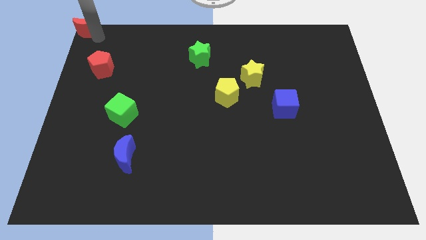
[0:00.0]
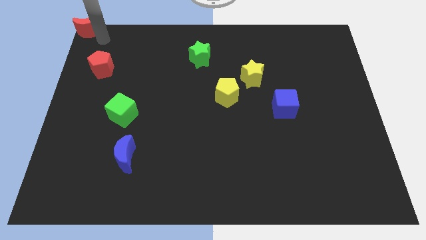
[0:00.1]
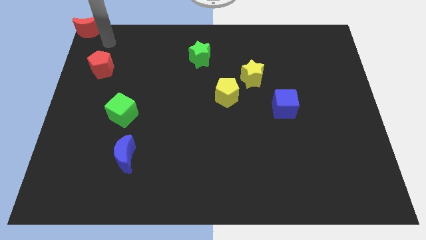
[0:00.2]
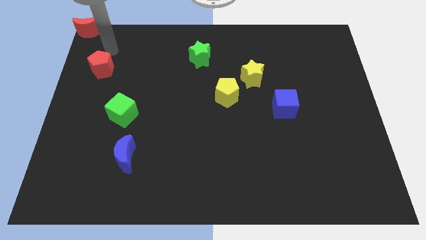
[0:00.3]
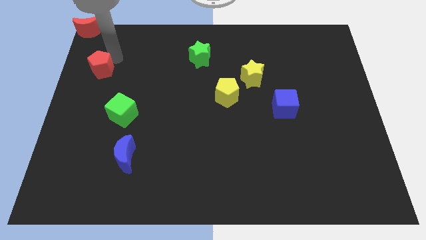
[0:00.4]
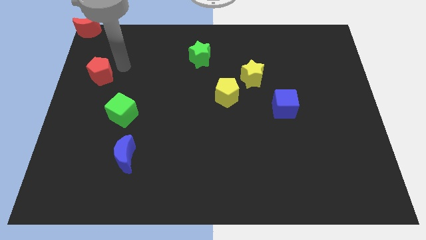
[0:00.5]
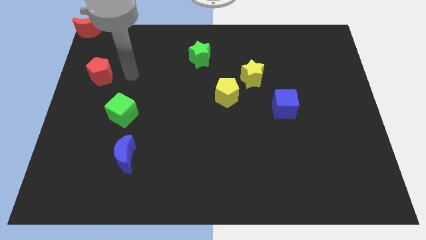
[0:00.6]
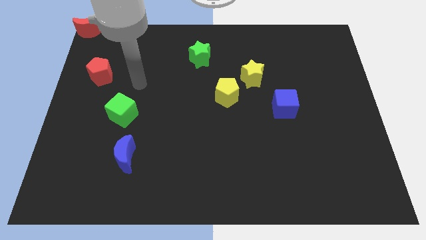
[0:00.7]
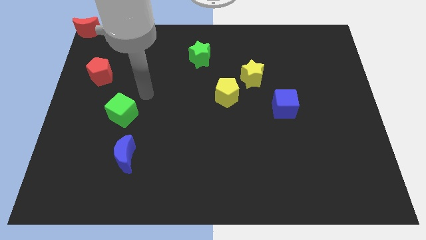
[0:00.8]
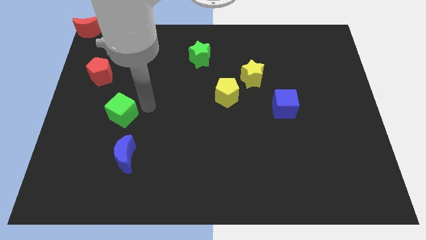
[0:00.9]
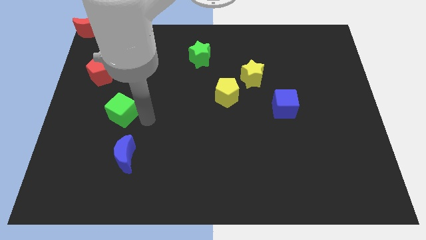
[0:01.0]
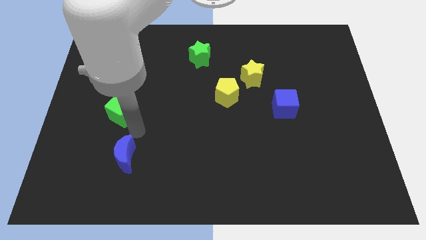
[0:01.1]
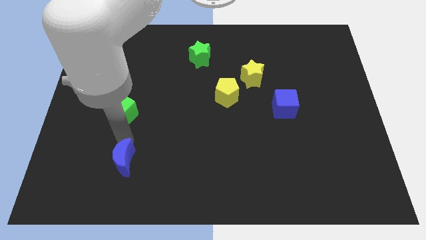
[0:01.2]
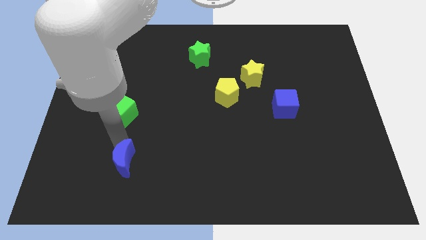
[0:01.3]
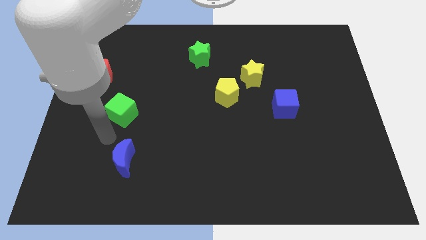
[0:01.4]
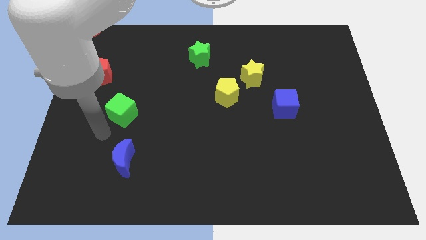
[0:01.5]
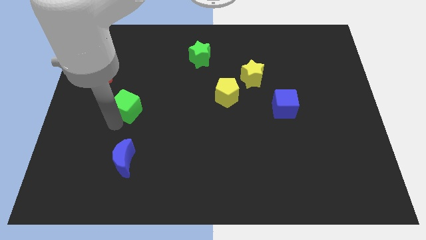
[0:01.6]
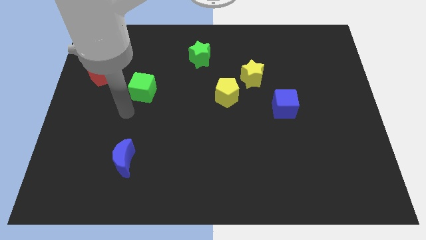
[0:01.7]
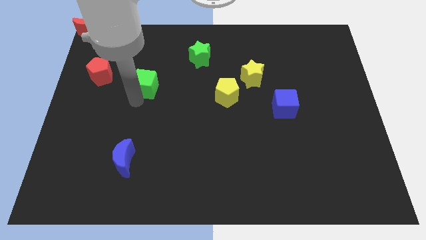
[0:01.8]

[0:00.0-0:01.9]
push the green cube slightly upwards

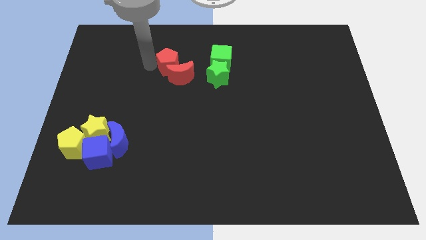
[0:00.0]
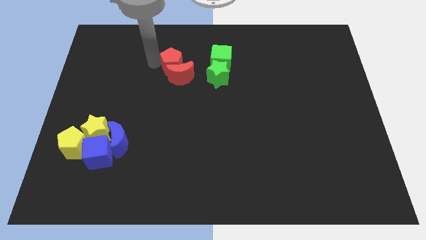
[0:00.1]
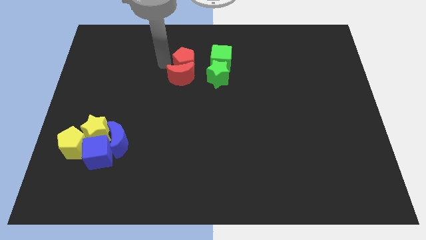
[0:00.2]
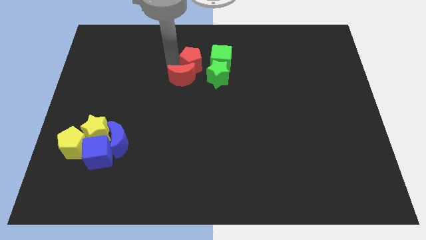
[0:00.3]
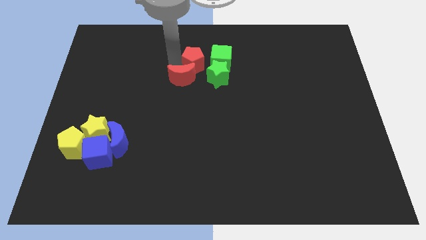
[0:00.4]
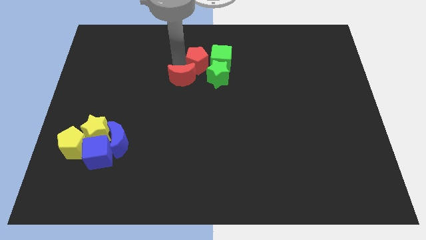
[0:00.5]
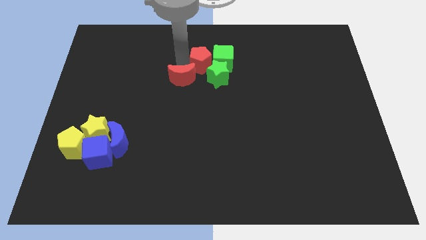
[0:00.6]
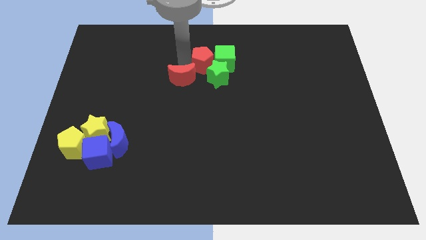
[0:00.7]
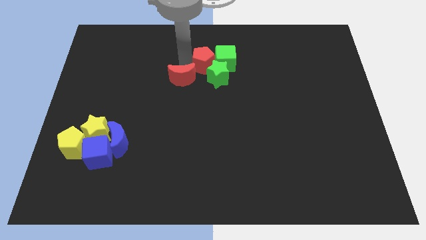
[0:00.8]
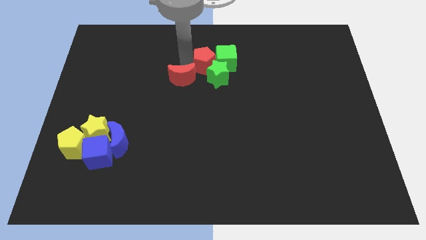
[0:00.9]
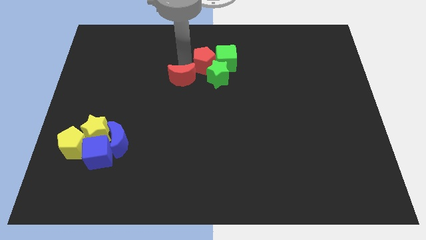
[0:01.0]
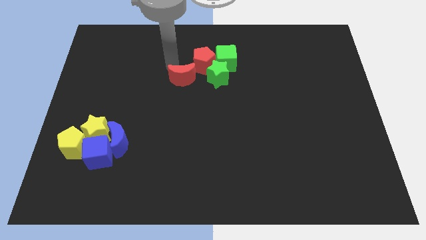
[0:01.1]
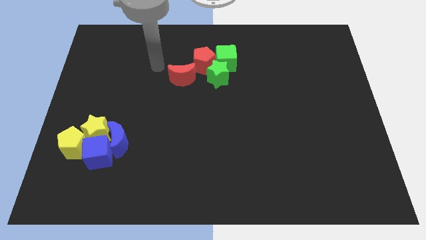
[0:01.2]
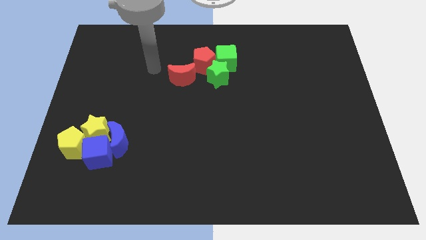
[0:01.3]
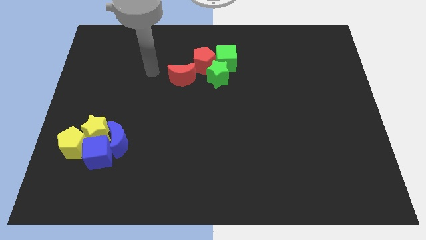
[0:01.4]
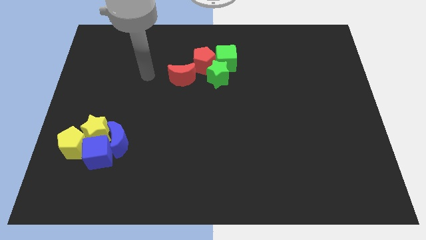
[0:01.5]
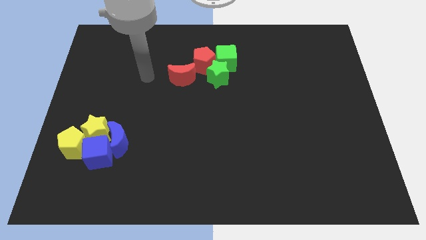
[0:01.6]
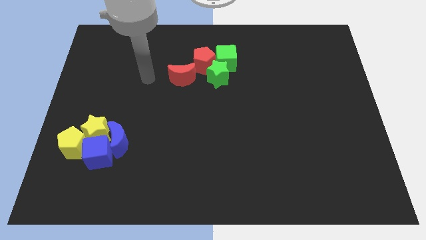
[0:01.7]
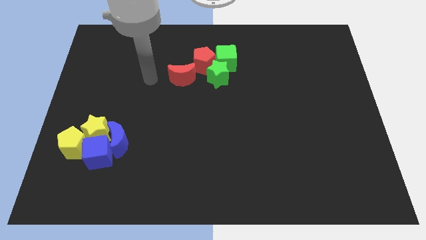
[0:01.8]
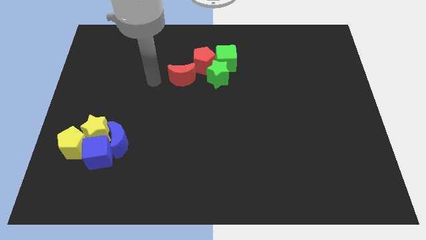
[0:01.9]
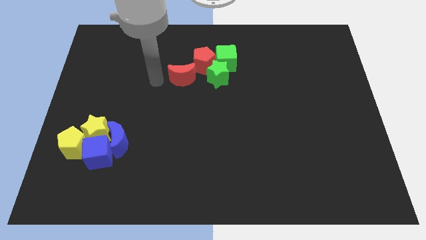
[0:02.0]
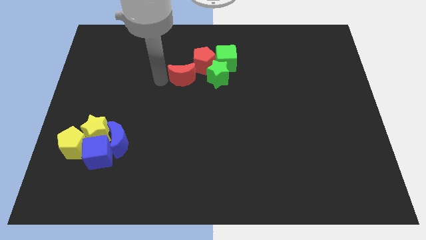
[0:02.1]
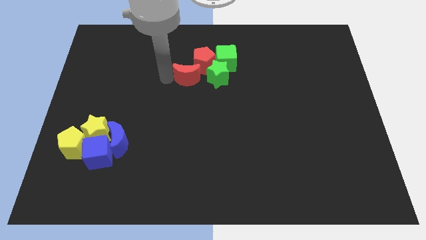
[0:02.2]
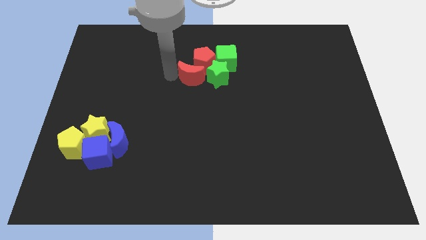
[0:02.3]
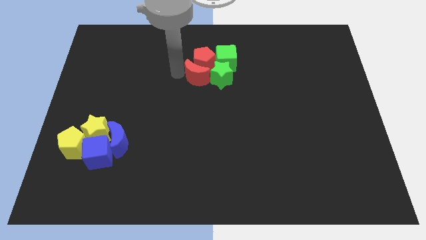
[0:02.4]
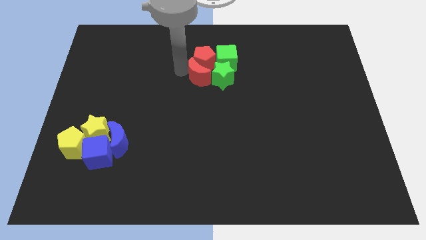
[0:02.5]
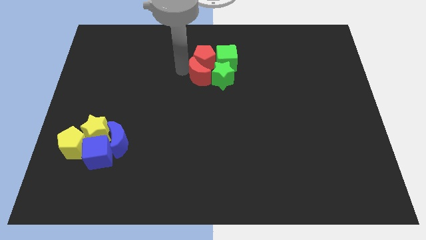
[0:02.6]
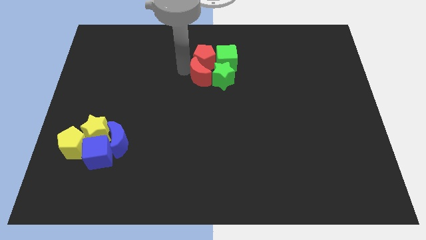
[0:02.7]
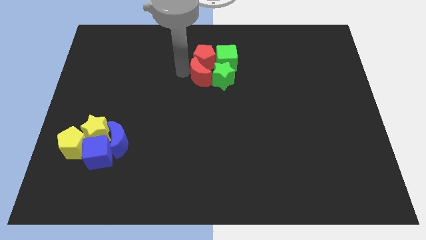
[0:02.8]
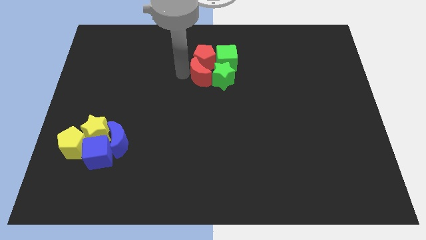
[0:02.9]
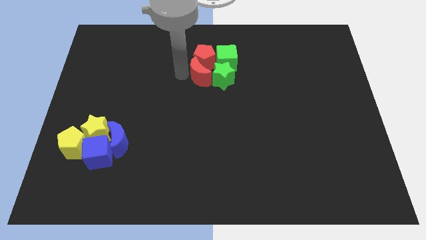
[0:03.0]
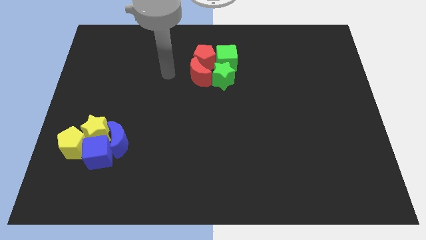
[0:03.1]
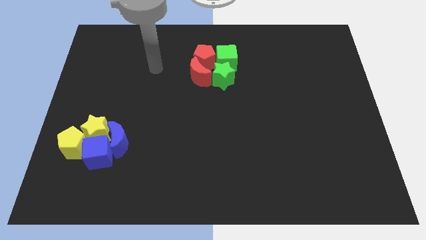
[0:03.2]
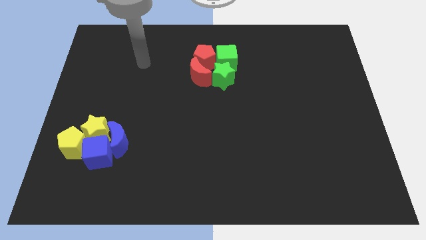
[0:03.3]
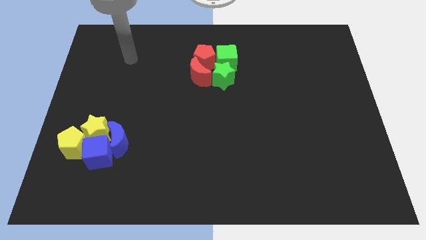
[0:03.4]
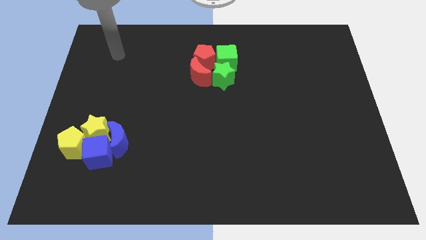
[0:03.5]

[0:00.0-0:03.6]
place red pentagon red moon to the group of blocks

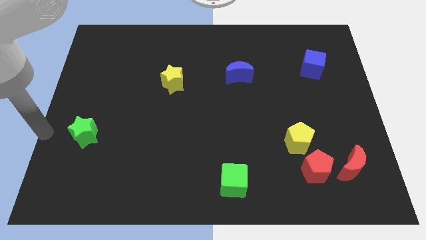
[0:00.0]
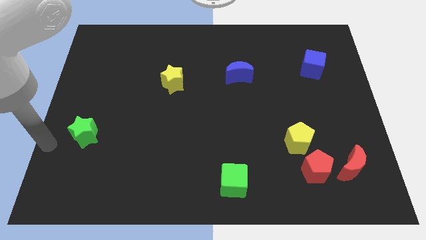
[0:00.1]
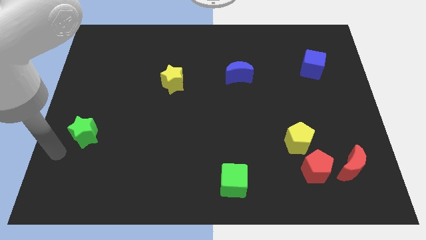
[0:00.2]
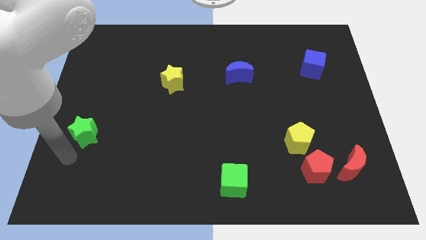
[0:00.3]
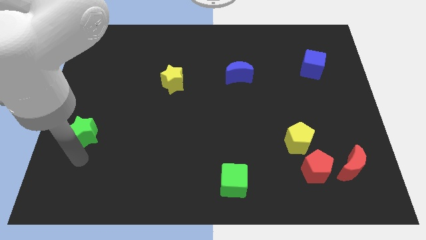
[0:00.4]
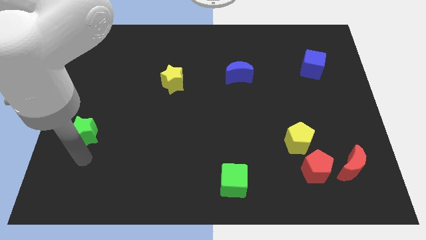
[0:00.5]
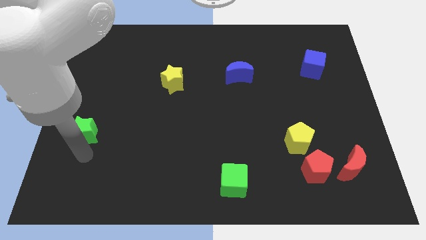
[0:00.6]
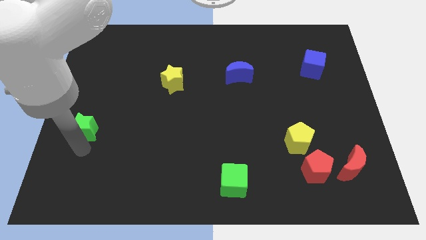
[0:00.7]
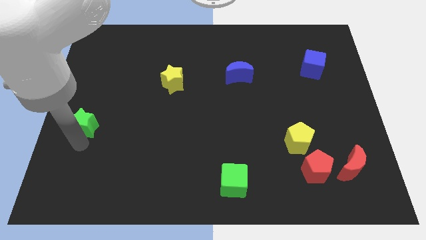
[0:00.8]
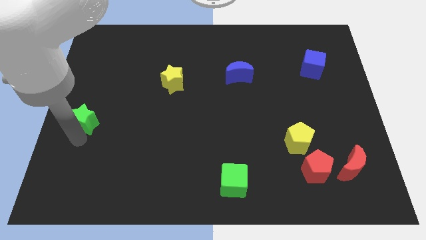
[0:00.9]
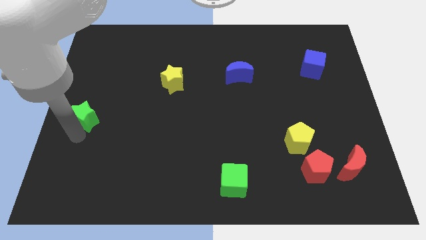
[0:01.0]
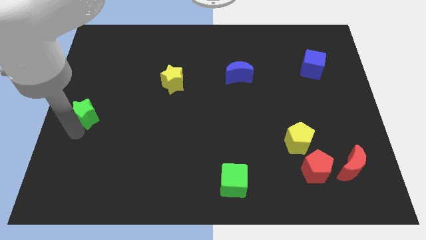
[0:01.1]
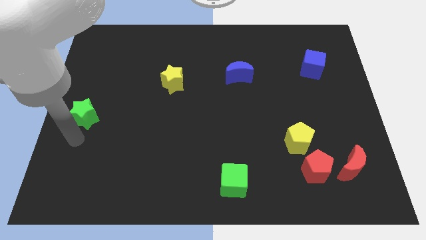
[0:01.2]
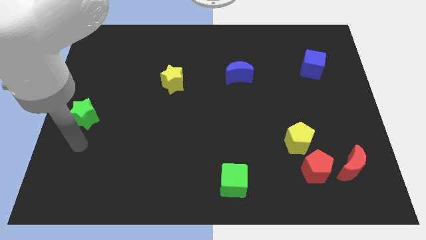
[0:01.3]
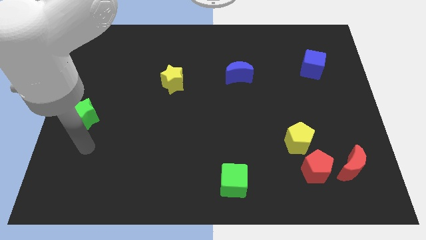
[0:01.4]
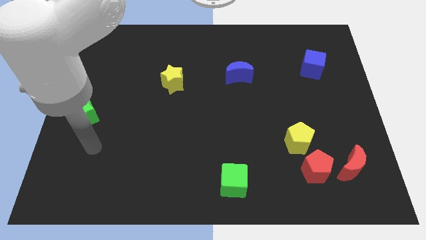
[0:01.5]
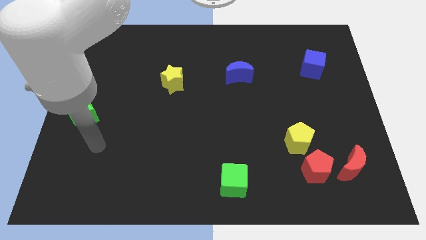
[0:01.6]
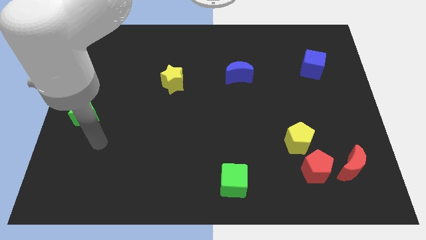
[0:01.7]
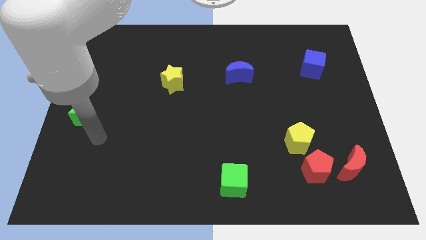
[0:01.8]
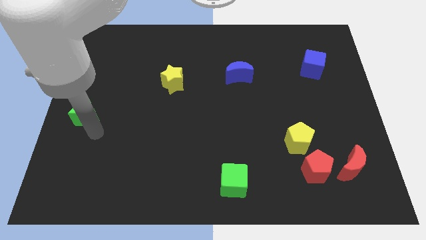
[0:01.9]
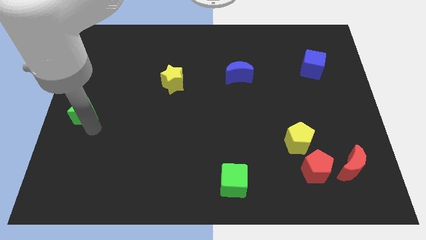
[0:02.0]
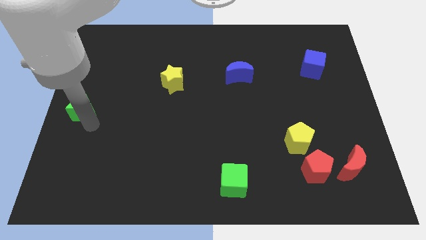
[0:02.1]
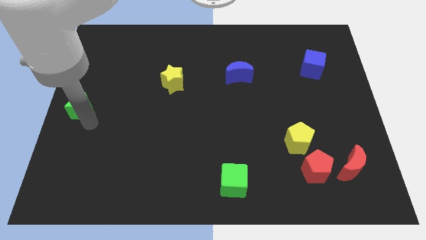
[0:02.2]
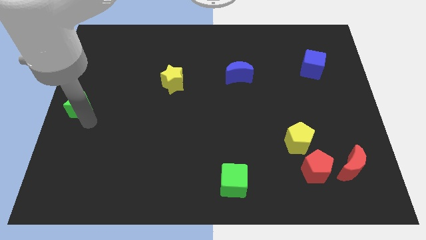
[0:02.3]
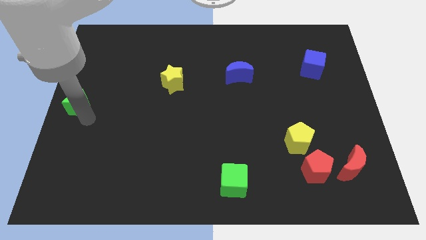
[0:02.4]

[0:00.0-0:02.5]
move the green star to the center left of the board

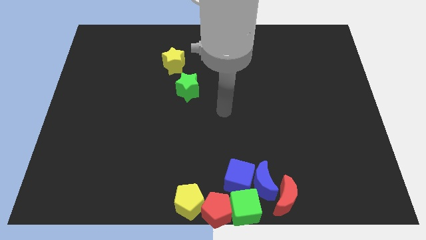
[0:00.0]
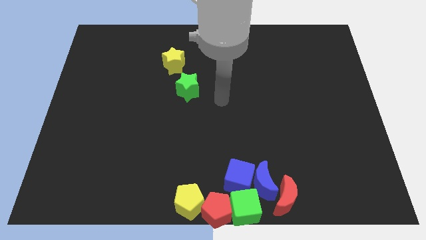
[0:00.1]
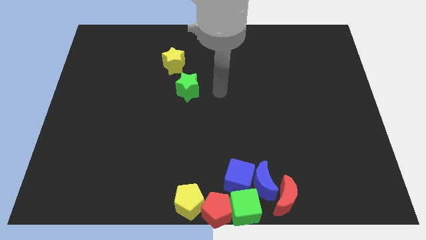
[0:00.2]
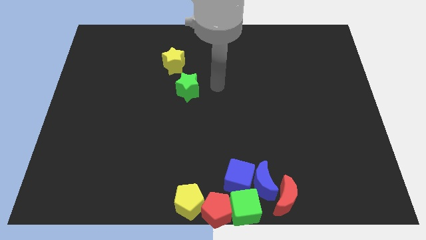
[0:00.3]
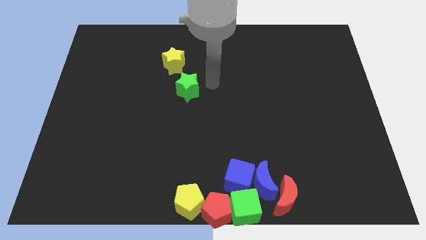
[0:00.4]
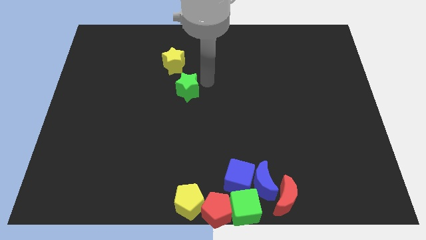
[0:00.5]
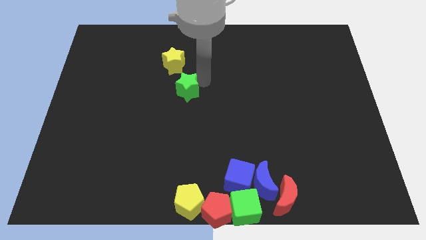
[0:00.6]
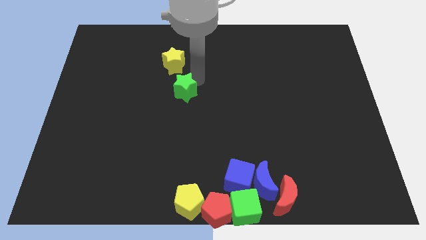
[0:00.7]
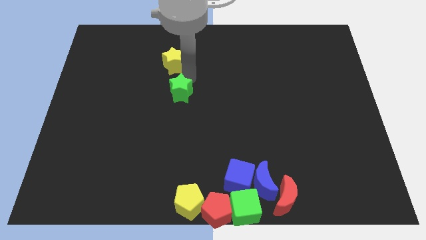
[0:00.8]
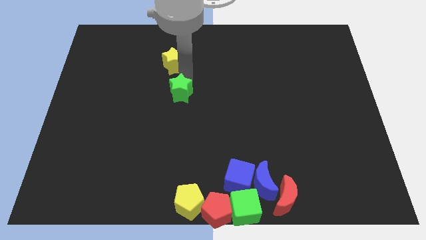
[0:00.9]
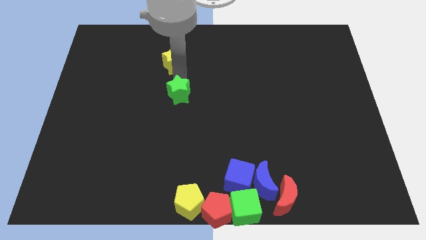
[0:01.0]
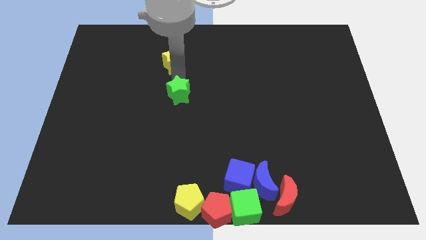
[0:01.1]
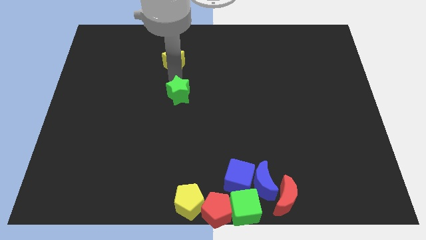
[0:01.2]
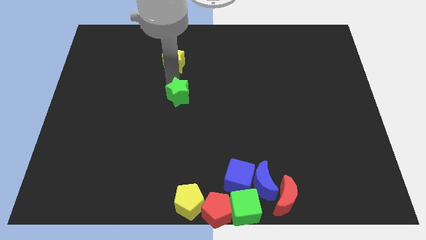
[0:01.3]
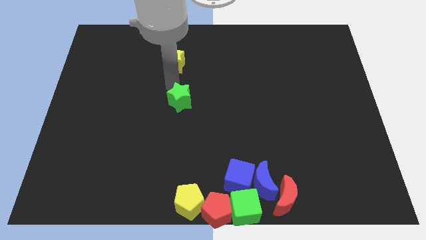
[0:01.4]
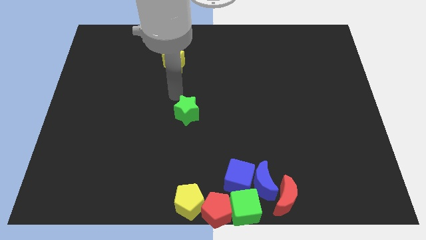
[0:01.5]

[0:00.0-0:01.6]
slide the green star towards the yellow pentagon
